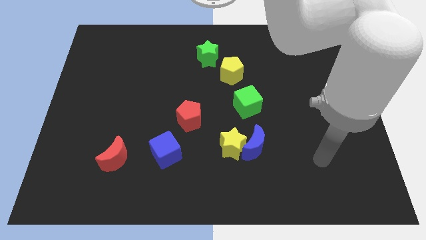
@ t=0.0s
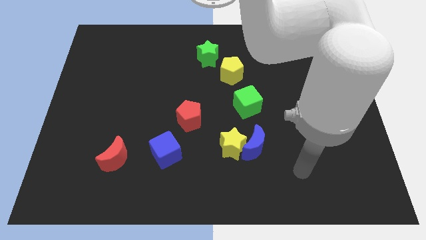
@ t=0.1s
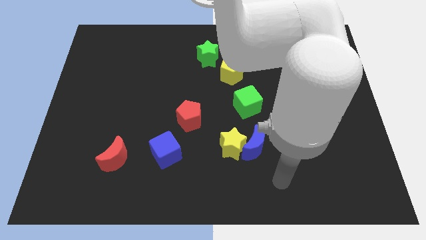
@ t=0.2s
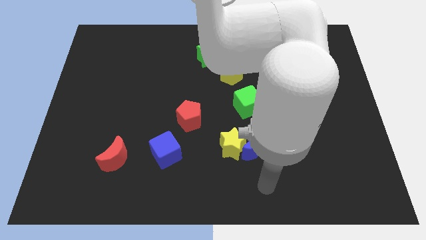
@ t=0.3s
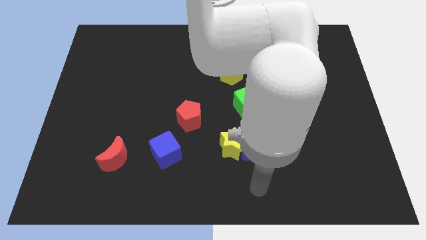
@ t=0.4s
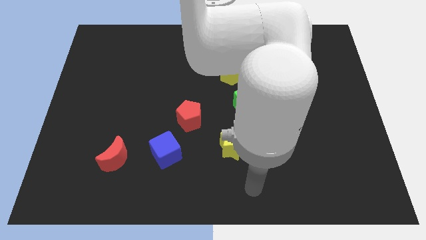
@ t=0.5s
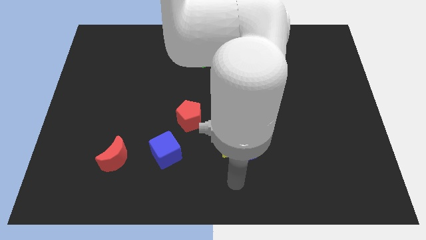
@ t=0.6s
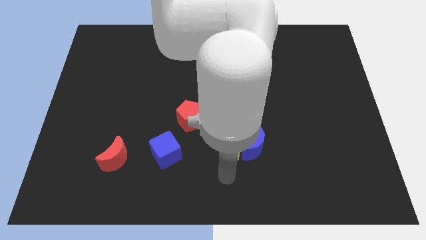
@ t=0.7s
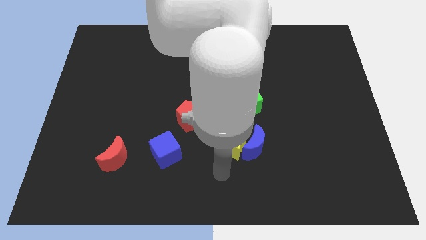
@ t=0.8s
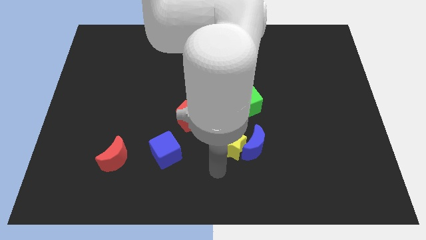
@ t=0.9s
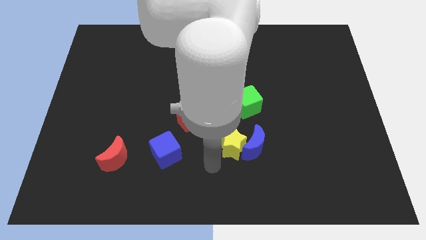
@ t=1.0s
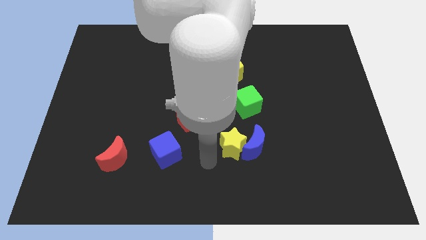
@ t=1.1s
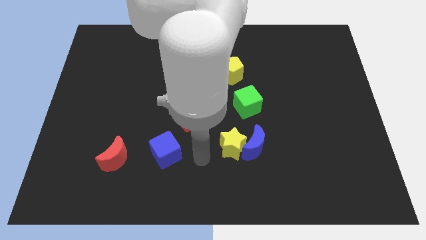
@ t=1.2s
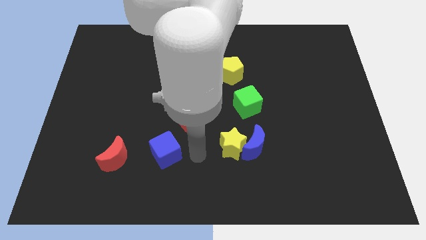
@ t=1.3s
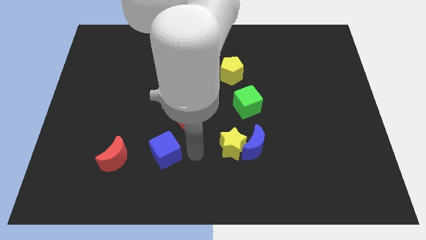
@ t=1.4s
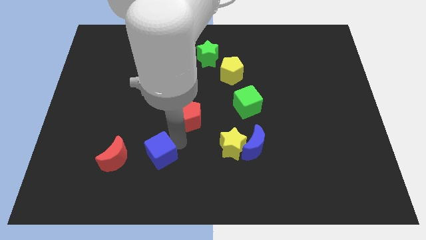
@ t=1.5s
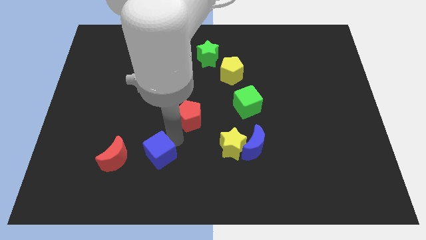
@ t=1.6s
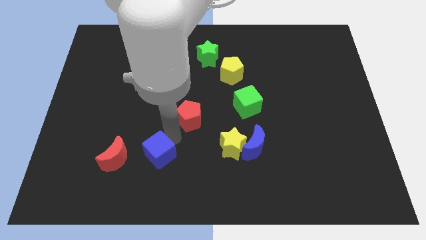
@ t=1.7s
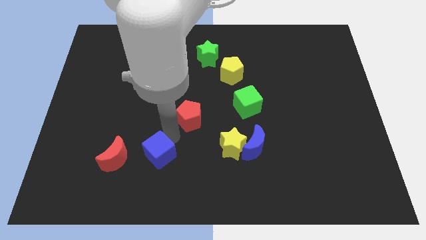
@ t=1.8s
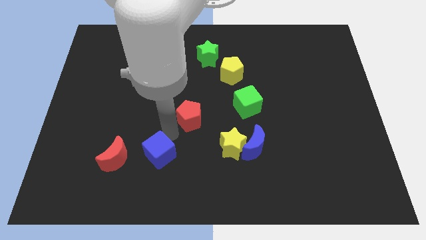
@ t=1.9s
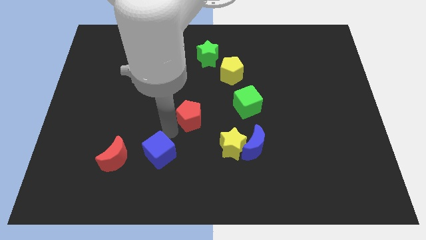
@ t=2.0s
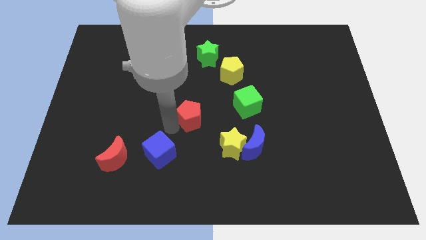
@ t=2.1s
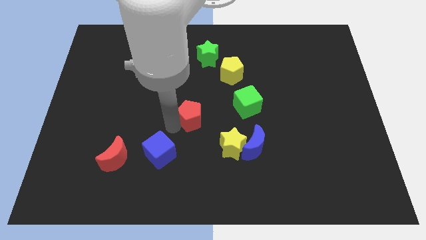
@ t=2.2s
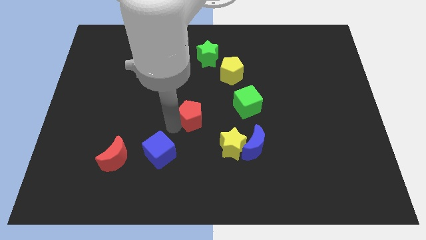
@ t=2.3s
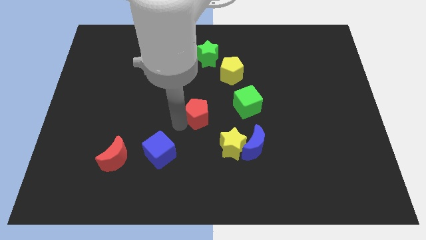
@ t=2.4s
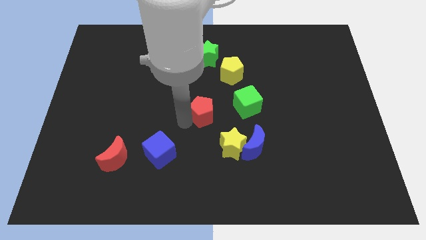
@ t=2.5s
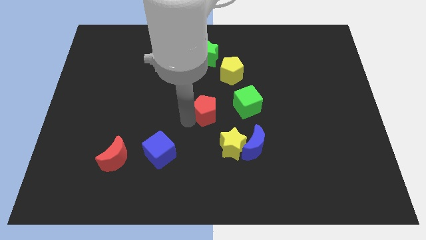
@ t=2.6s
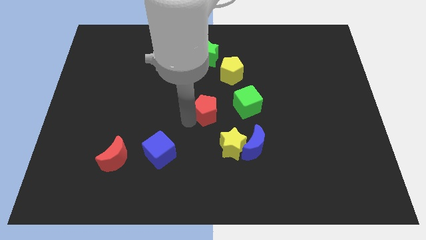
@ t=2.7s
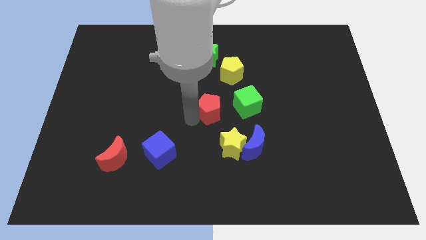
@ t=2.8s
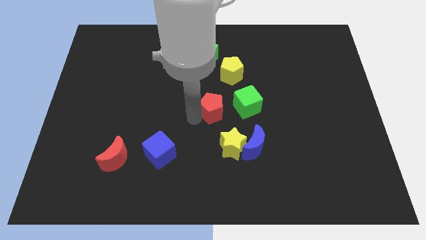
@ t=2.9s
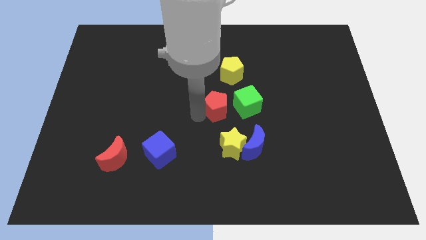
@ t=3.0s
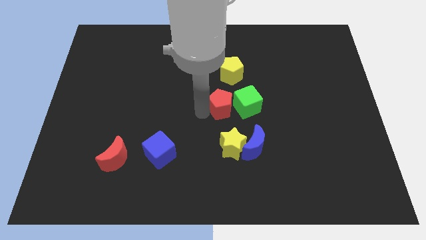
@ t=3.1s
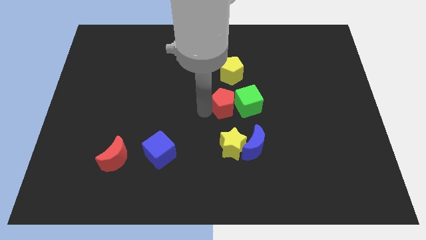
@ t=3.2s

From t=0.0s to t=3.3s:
put the red pentagon close to the green cube

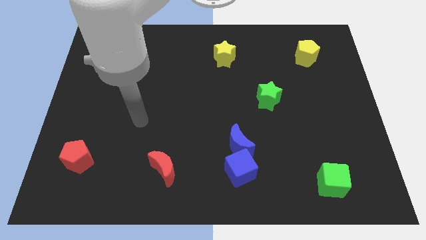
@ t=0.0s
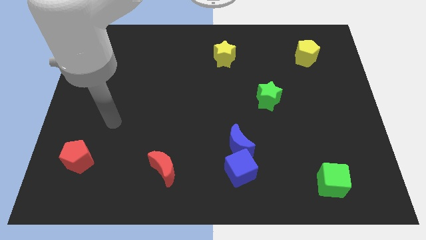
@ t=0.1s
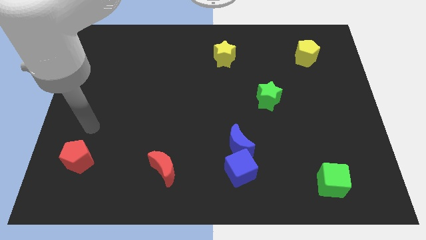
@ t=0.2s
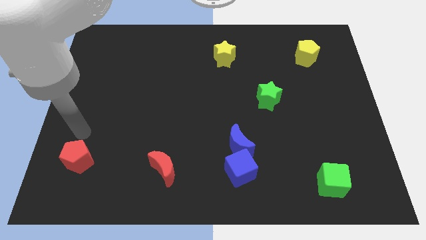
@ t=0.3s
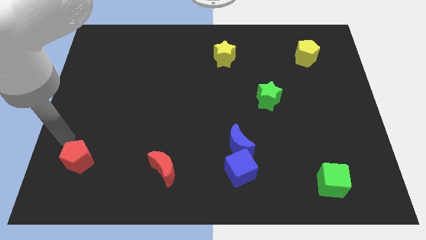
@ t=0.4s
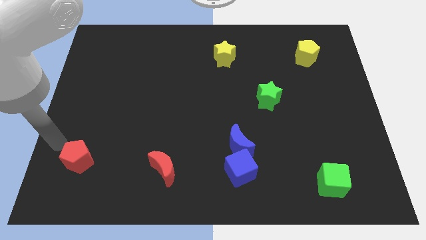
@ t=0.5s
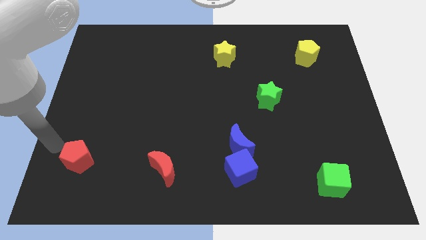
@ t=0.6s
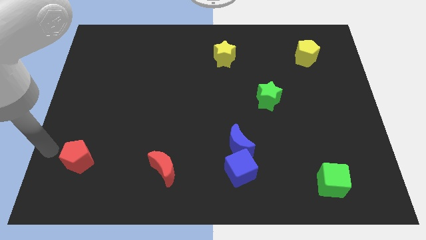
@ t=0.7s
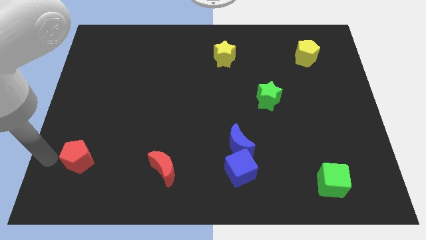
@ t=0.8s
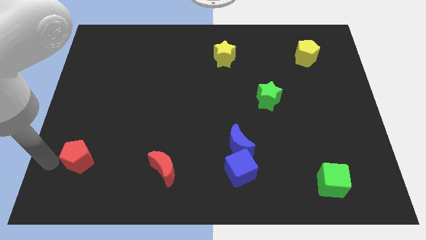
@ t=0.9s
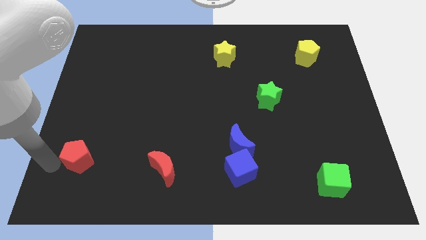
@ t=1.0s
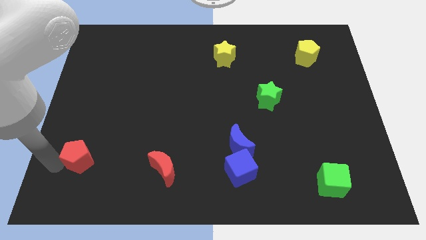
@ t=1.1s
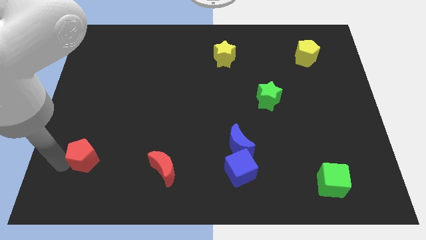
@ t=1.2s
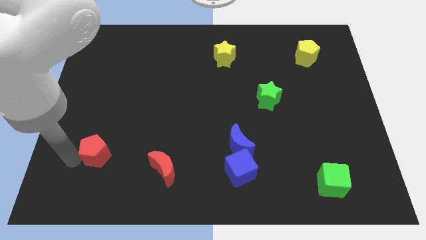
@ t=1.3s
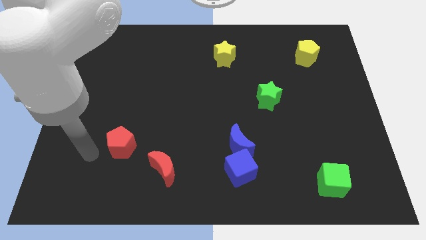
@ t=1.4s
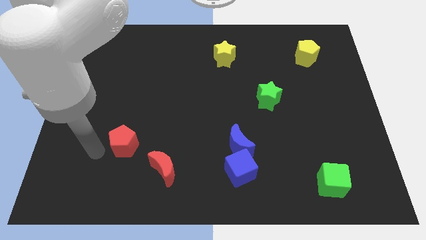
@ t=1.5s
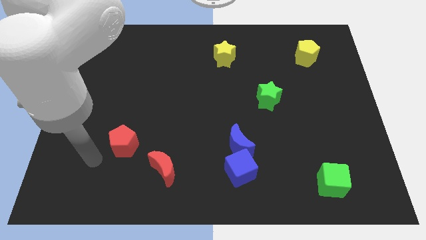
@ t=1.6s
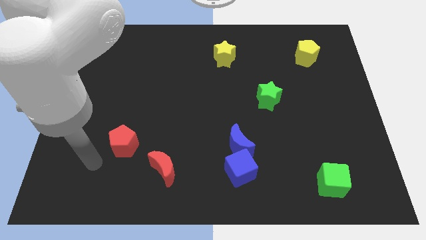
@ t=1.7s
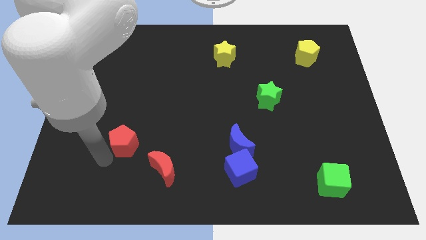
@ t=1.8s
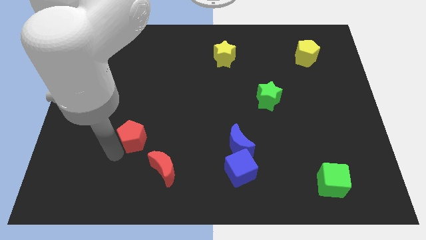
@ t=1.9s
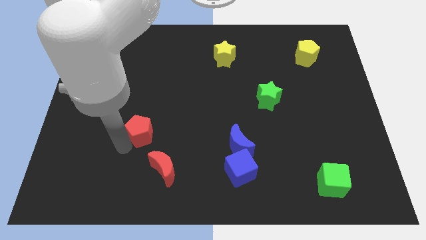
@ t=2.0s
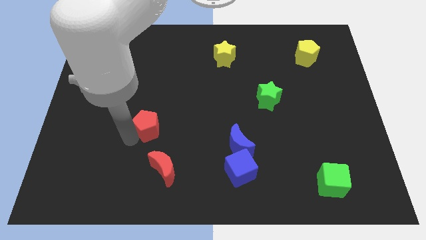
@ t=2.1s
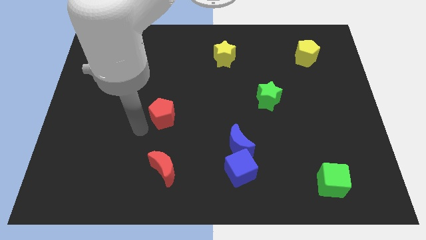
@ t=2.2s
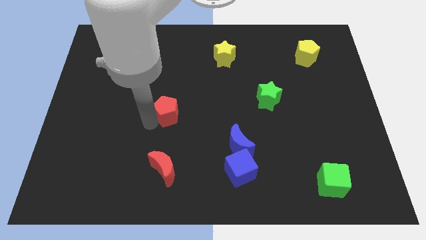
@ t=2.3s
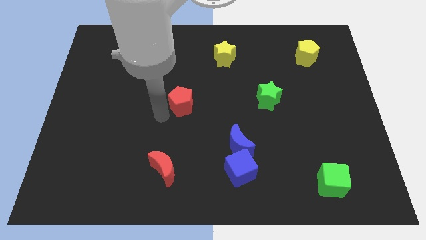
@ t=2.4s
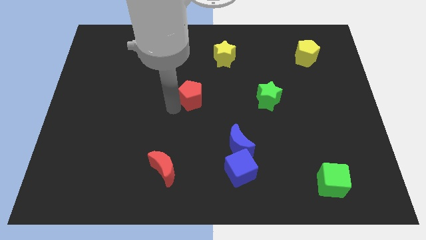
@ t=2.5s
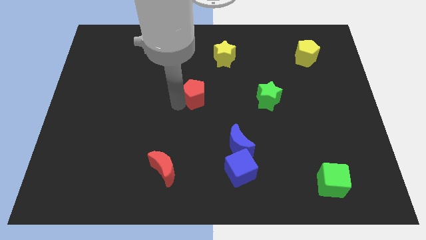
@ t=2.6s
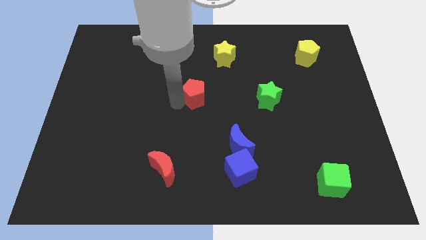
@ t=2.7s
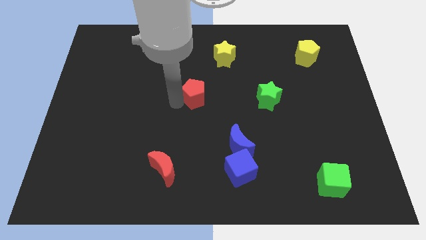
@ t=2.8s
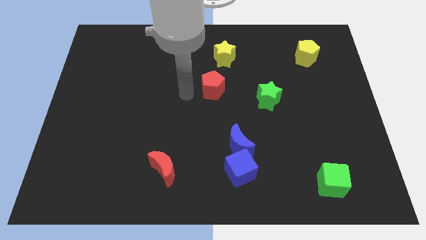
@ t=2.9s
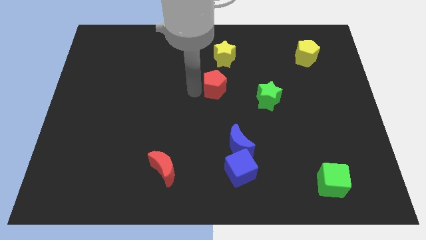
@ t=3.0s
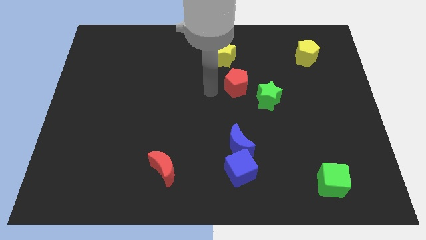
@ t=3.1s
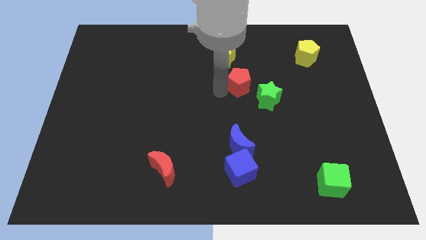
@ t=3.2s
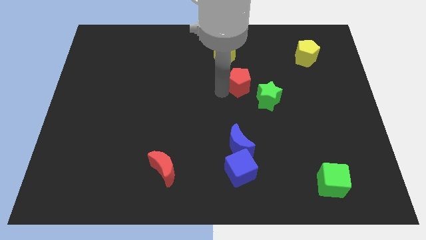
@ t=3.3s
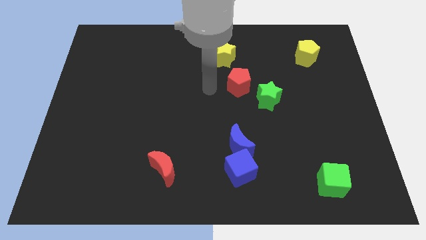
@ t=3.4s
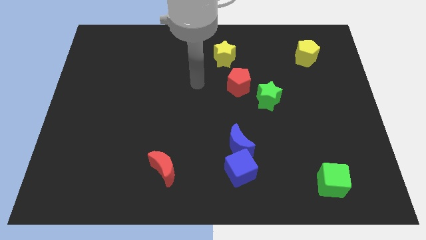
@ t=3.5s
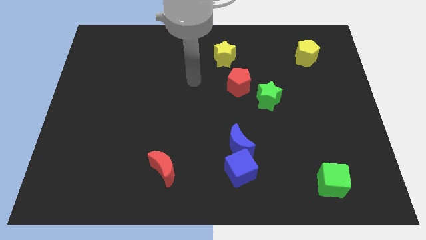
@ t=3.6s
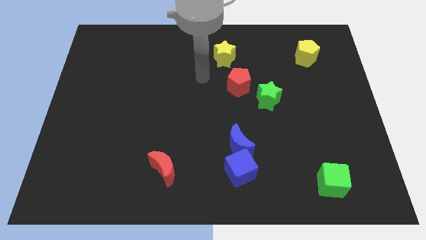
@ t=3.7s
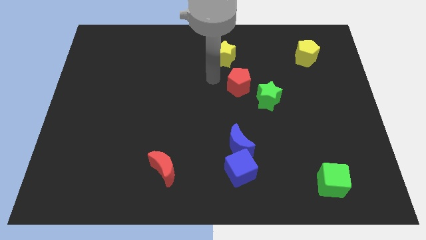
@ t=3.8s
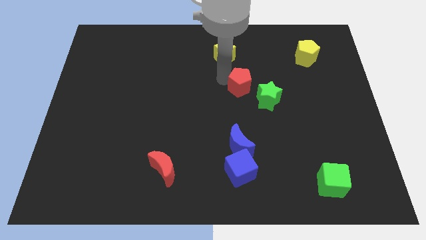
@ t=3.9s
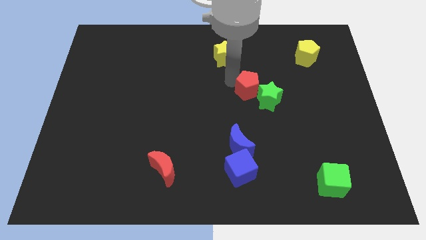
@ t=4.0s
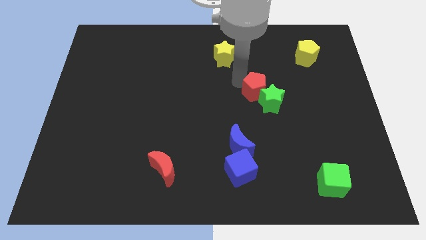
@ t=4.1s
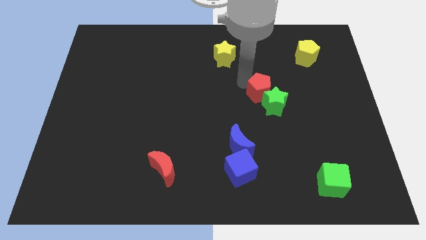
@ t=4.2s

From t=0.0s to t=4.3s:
put the red pentagon towards the green star

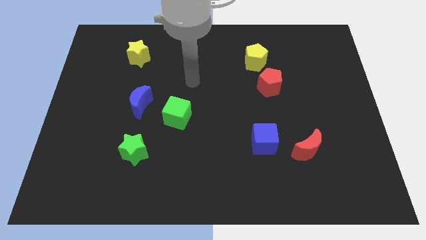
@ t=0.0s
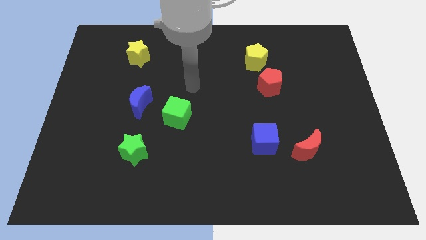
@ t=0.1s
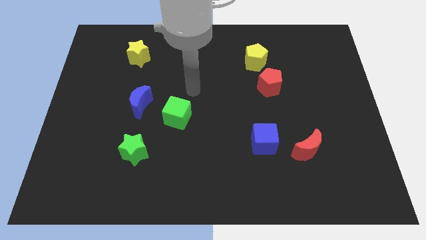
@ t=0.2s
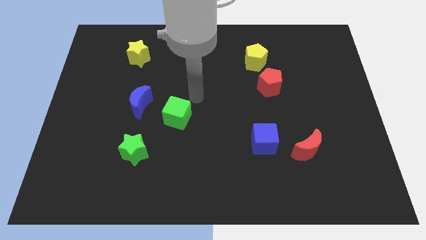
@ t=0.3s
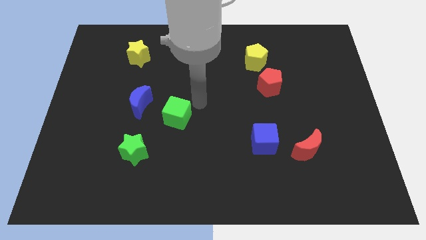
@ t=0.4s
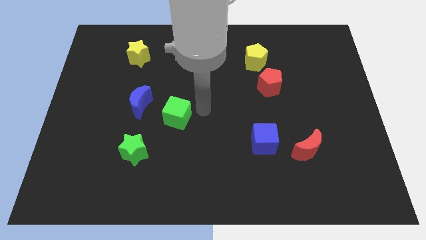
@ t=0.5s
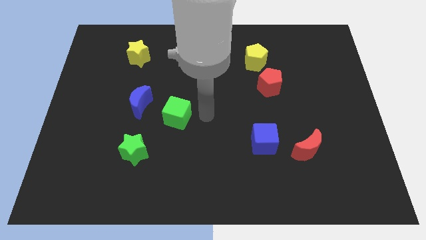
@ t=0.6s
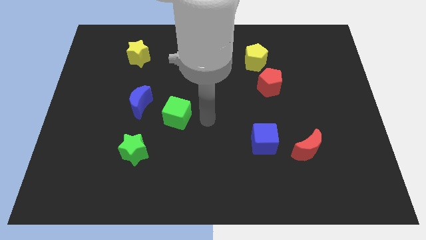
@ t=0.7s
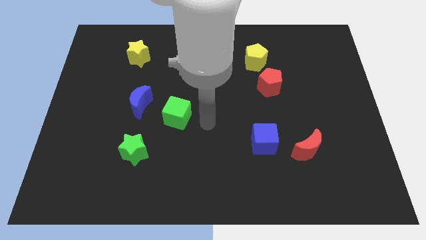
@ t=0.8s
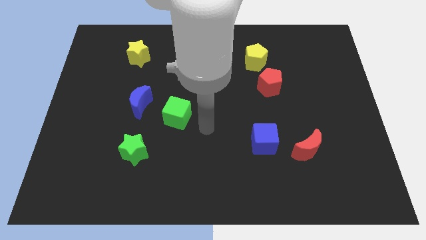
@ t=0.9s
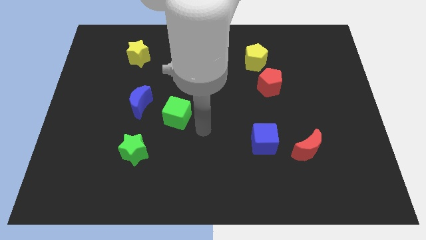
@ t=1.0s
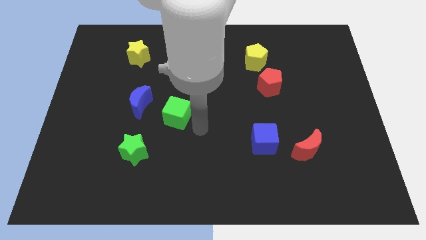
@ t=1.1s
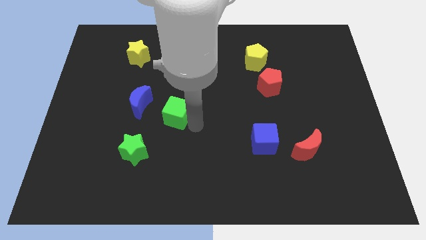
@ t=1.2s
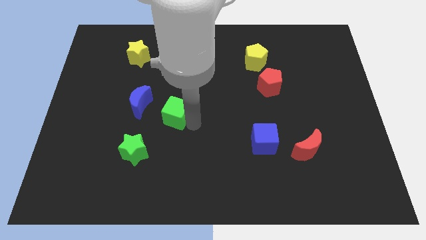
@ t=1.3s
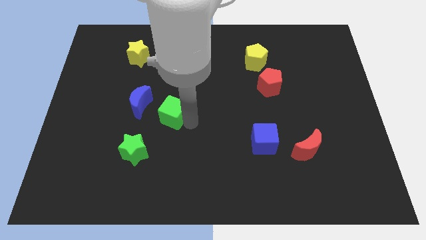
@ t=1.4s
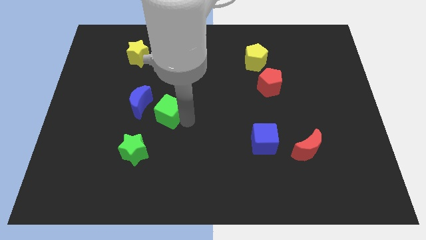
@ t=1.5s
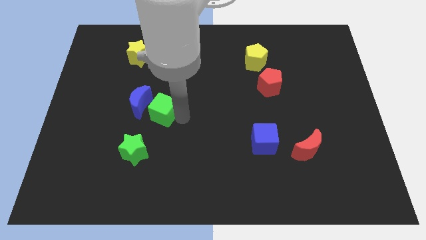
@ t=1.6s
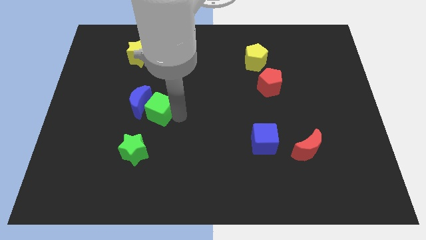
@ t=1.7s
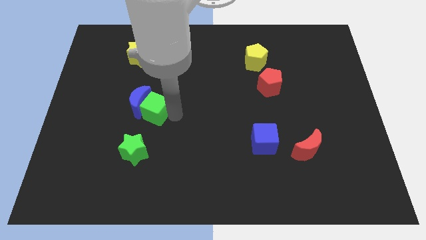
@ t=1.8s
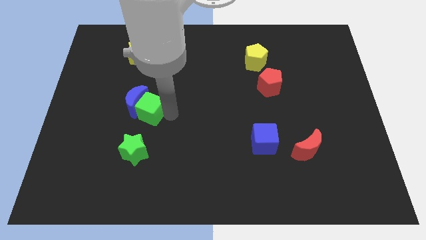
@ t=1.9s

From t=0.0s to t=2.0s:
slide the green cube next to the blue moon
